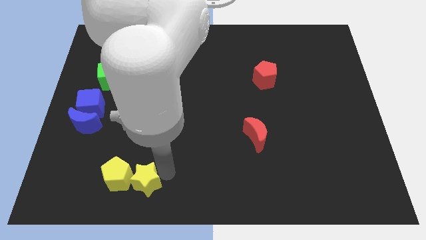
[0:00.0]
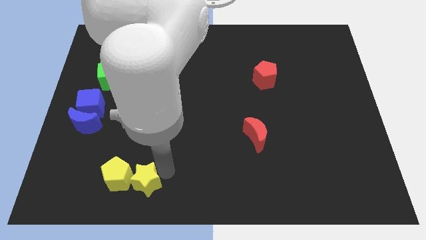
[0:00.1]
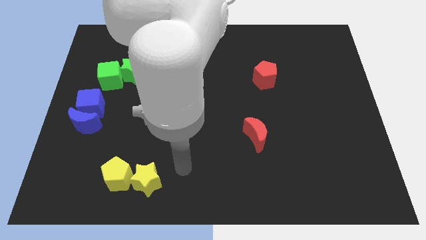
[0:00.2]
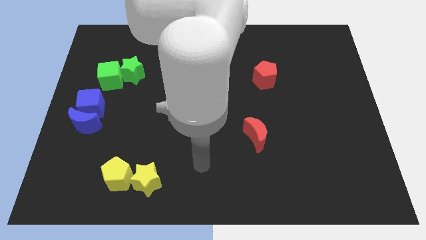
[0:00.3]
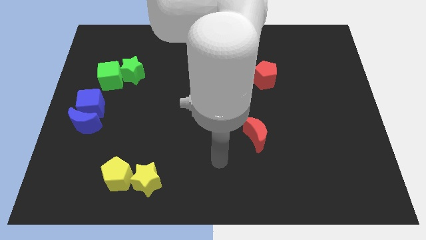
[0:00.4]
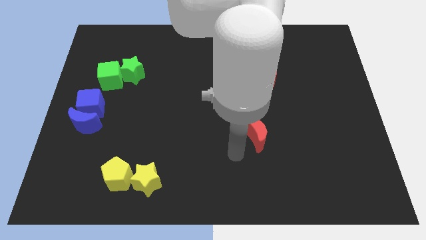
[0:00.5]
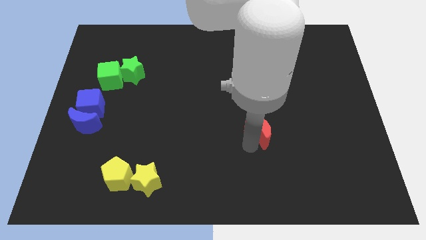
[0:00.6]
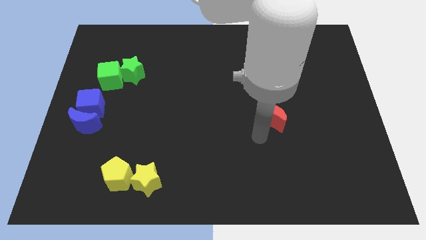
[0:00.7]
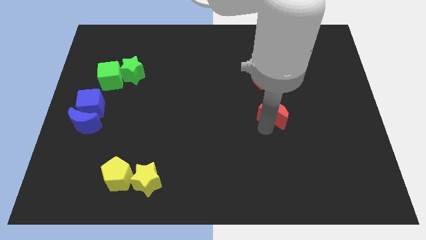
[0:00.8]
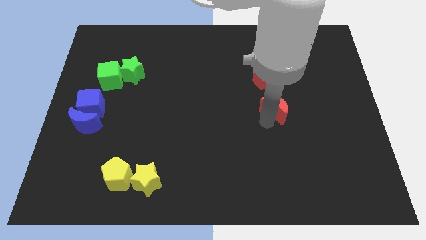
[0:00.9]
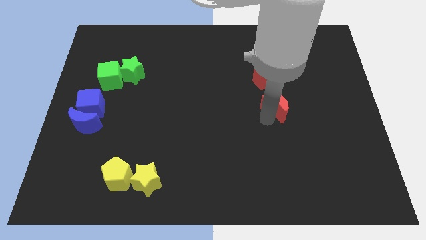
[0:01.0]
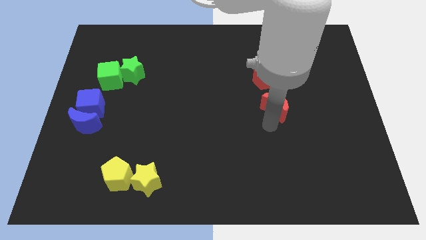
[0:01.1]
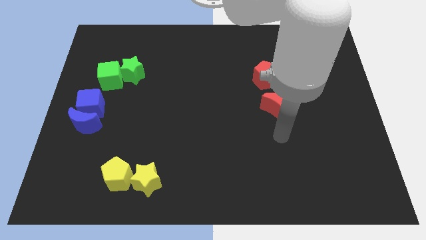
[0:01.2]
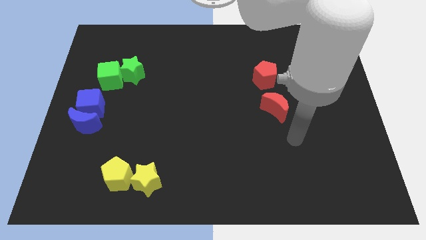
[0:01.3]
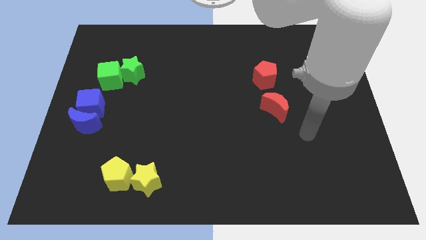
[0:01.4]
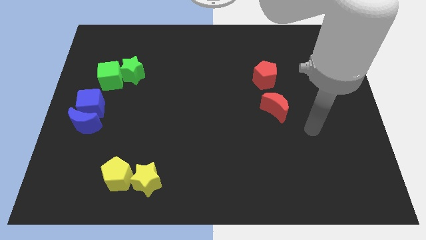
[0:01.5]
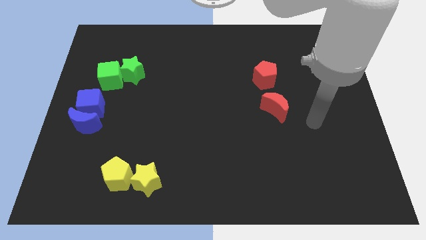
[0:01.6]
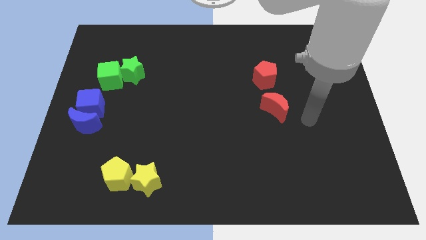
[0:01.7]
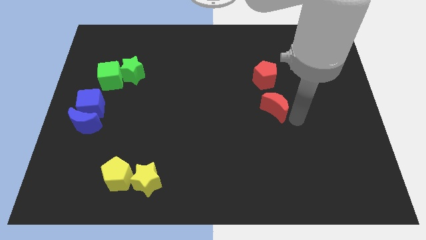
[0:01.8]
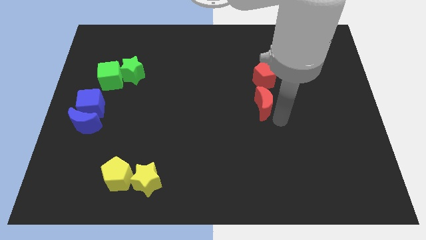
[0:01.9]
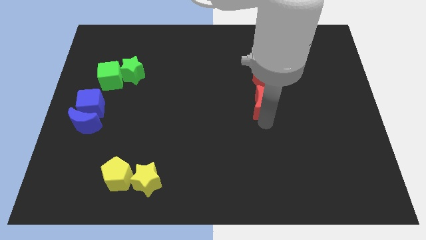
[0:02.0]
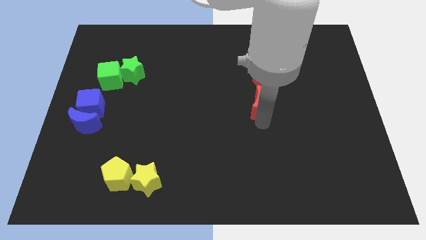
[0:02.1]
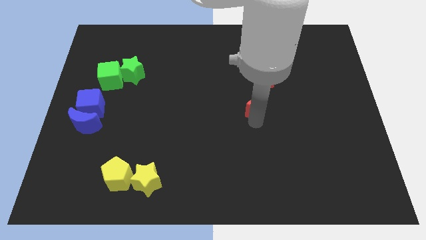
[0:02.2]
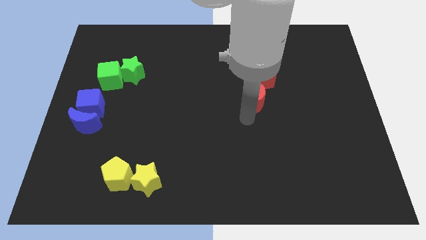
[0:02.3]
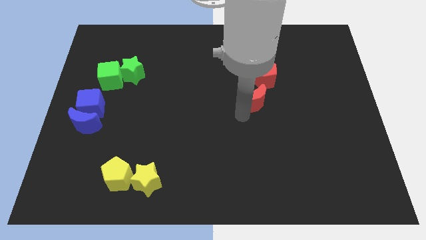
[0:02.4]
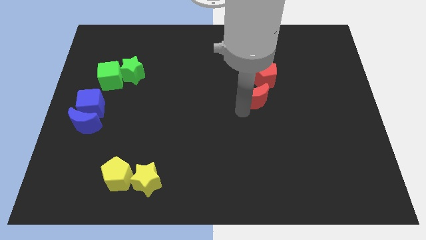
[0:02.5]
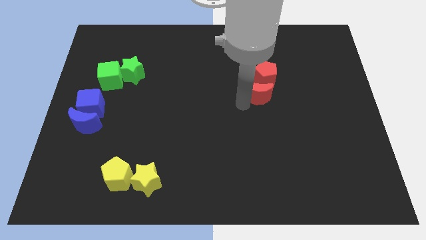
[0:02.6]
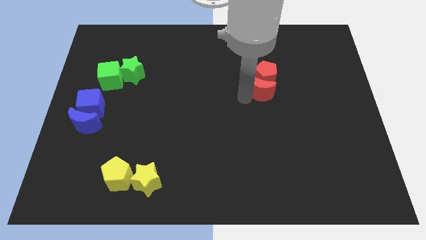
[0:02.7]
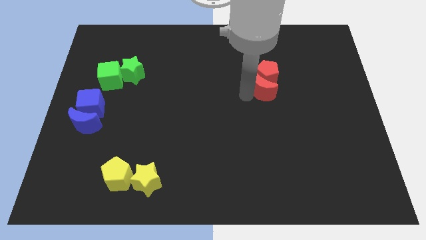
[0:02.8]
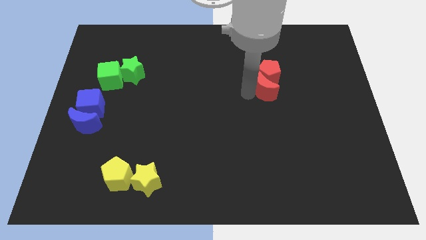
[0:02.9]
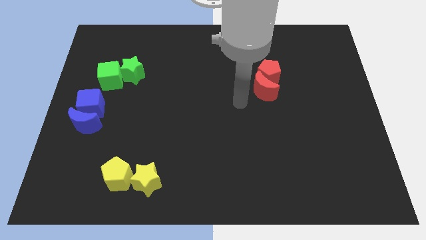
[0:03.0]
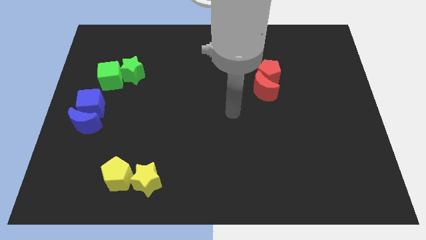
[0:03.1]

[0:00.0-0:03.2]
push the red crescent to the bottom of the red pentagon

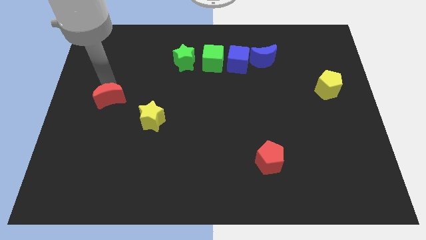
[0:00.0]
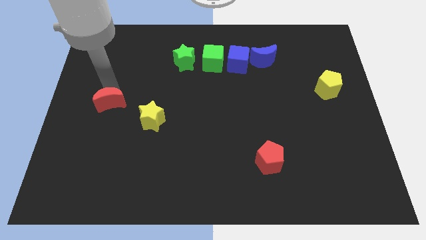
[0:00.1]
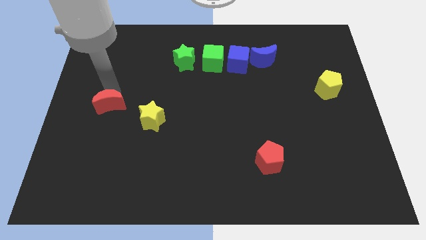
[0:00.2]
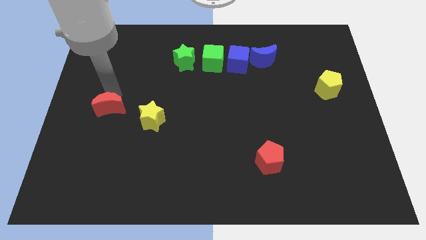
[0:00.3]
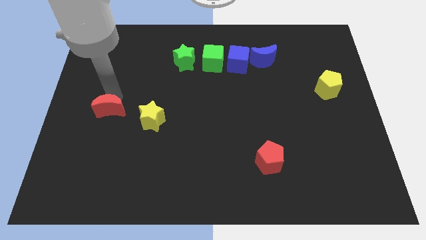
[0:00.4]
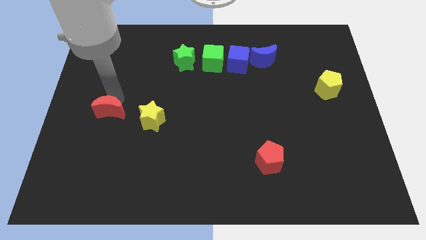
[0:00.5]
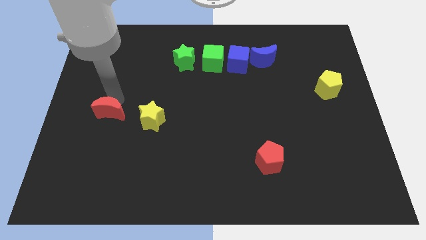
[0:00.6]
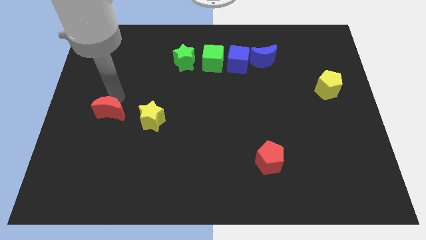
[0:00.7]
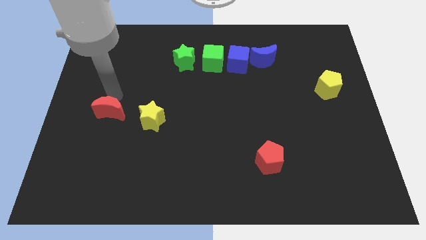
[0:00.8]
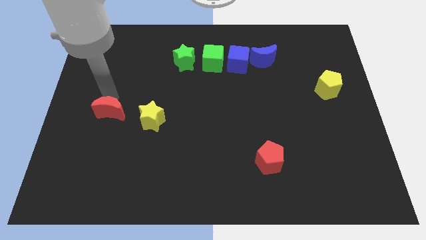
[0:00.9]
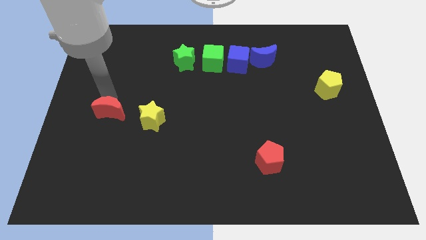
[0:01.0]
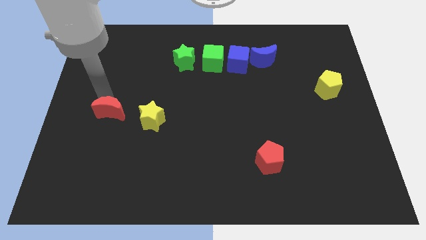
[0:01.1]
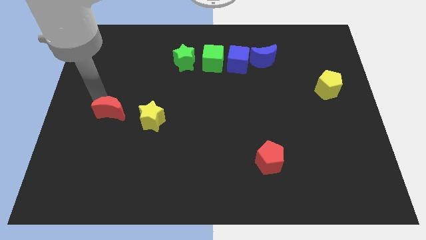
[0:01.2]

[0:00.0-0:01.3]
move the red crescent to the down

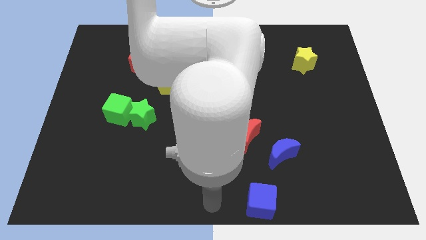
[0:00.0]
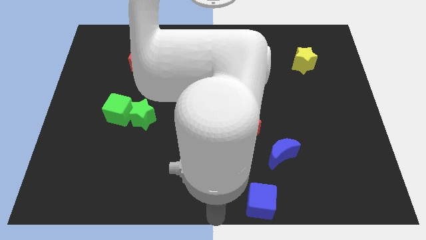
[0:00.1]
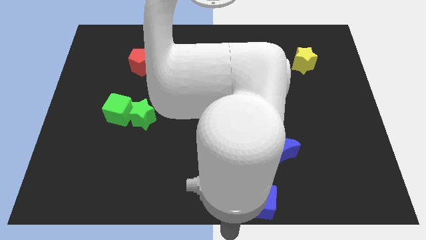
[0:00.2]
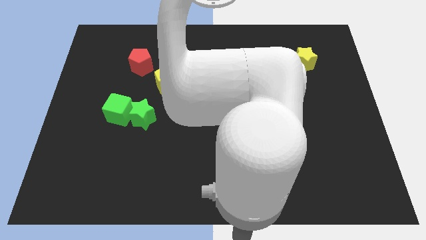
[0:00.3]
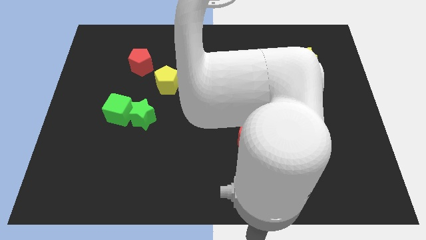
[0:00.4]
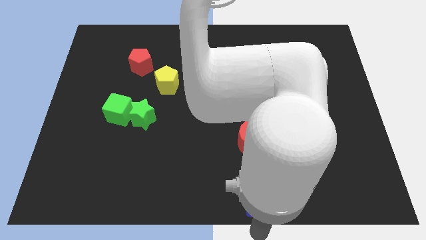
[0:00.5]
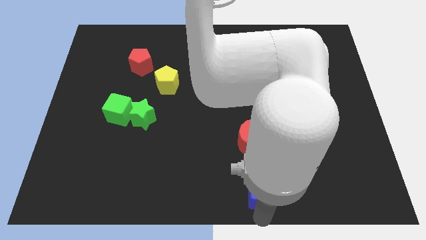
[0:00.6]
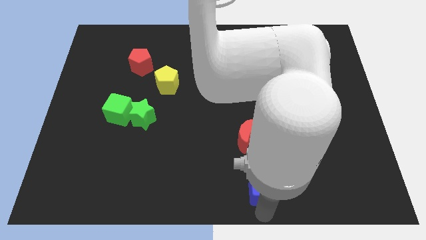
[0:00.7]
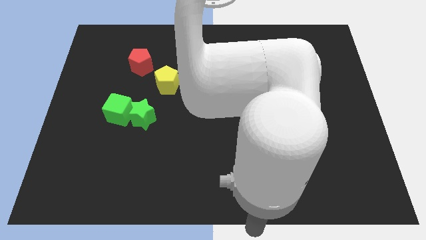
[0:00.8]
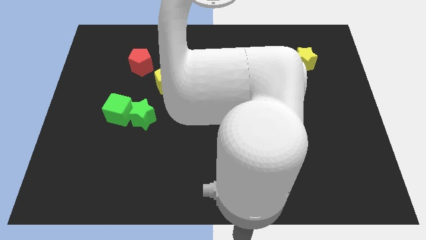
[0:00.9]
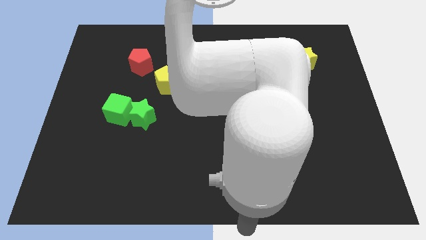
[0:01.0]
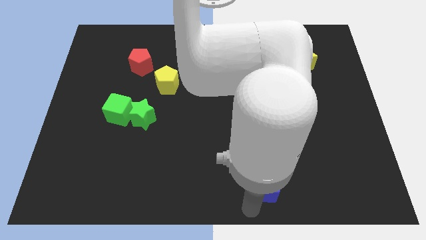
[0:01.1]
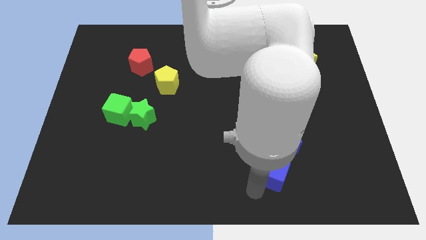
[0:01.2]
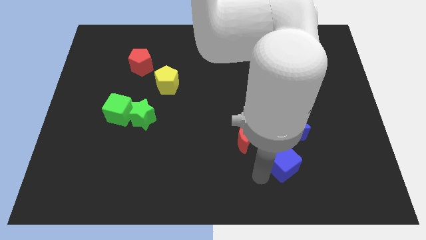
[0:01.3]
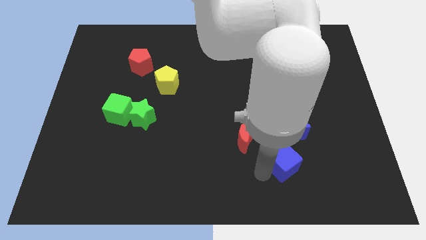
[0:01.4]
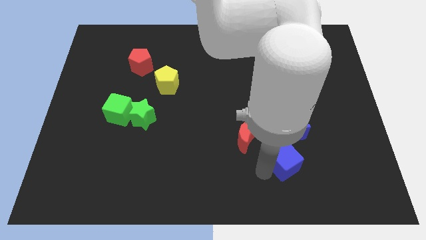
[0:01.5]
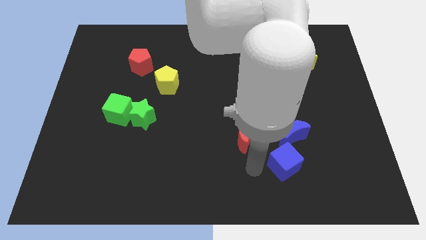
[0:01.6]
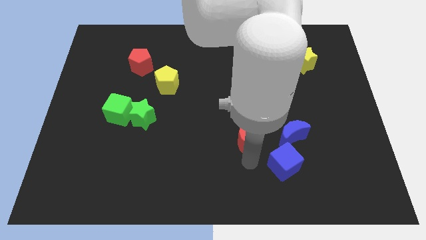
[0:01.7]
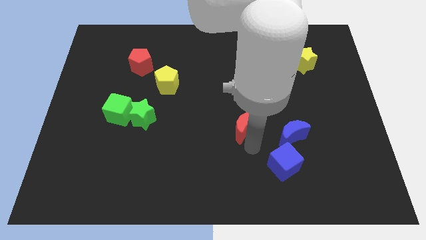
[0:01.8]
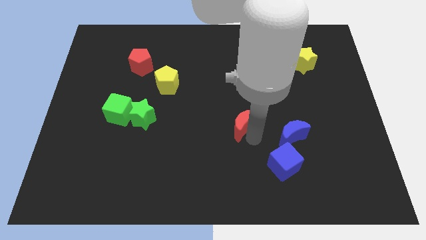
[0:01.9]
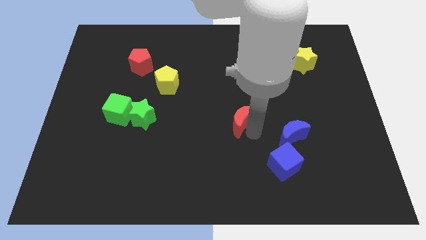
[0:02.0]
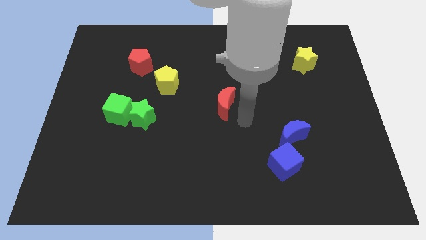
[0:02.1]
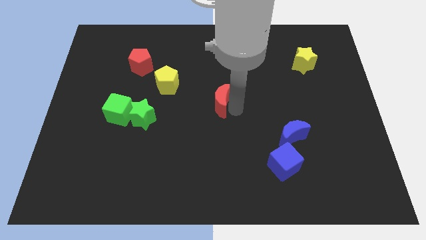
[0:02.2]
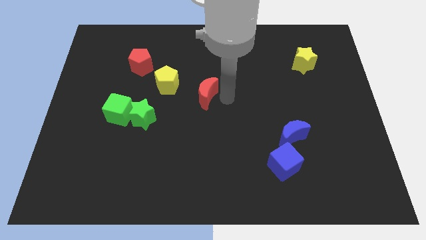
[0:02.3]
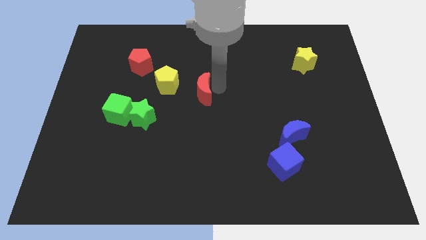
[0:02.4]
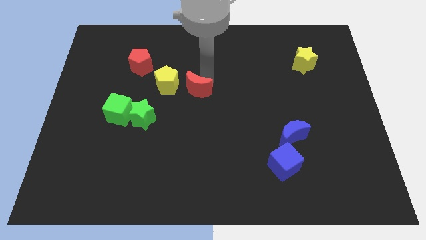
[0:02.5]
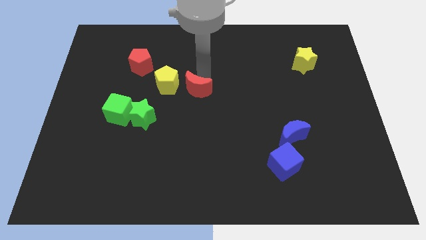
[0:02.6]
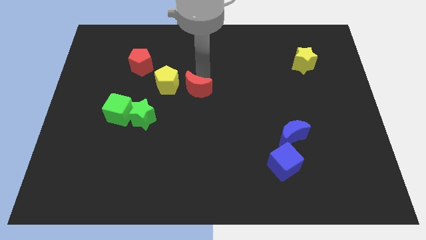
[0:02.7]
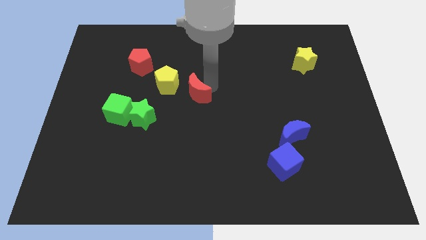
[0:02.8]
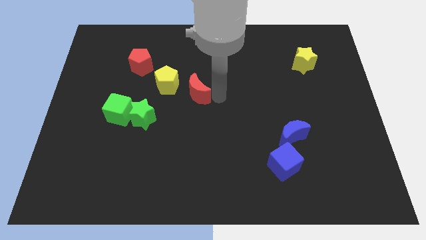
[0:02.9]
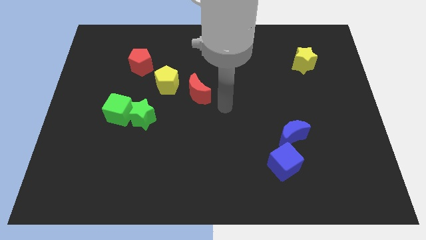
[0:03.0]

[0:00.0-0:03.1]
push the red moon towards the center of the board

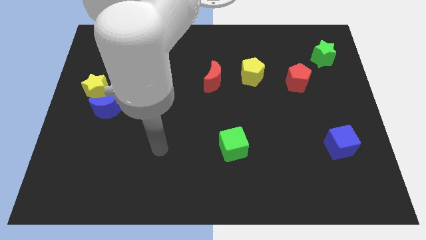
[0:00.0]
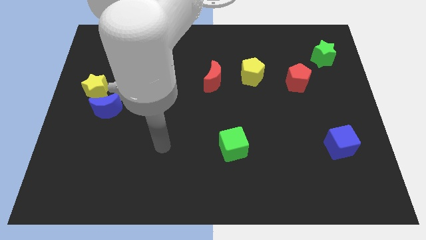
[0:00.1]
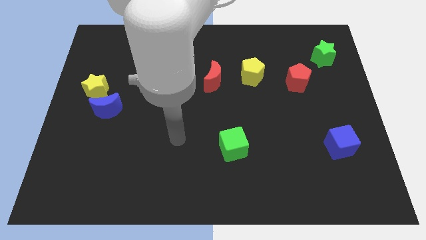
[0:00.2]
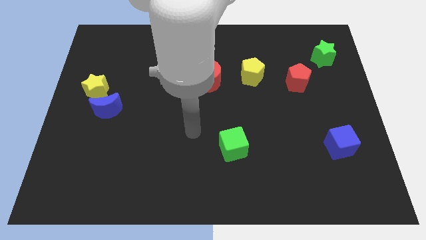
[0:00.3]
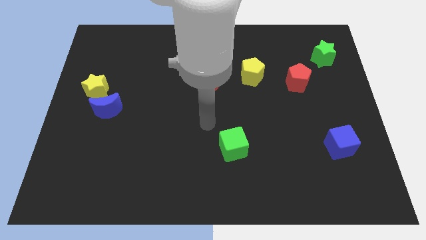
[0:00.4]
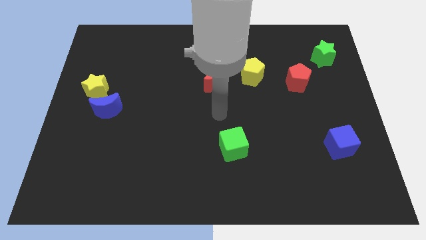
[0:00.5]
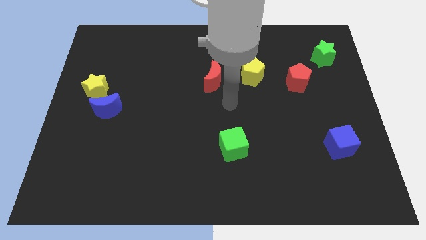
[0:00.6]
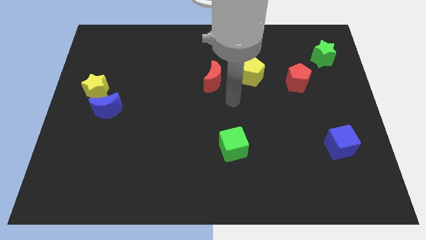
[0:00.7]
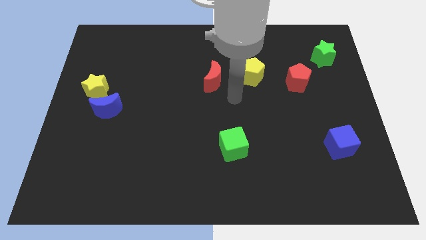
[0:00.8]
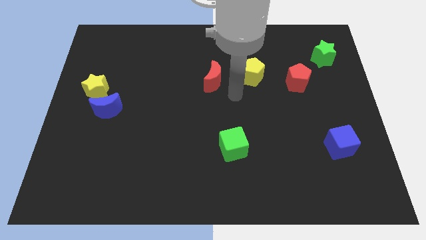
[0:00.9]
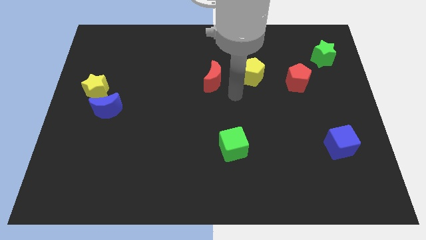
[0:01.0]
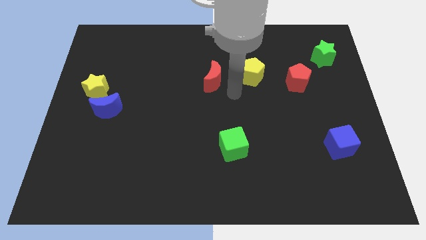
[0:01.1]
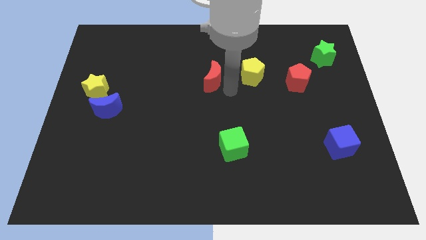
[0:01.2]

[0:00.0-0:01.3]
point your arm at the bottom right side of the red moon
